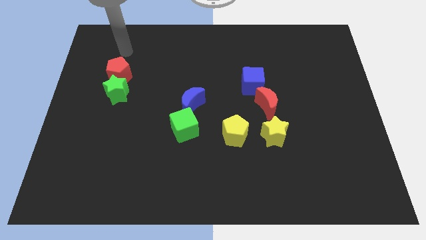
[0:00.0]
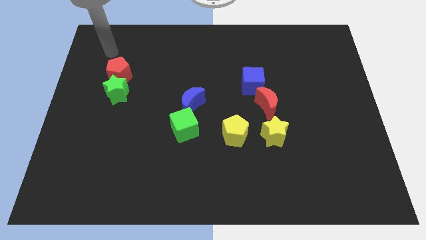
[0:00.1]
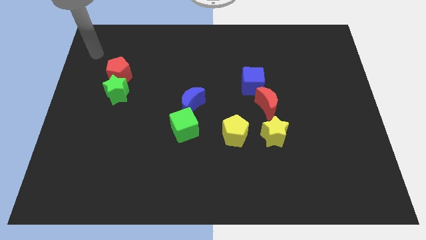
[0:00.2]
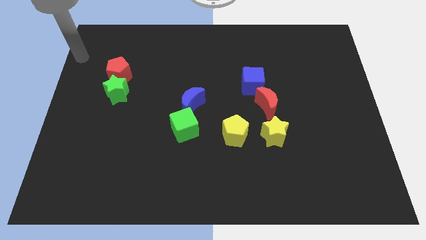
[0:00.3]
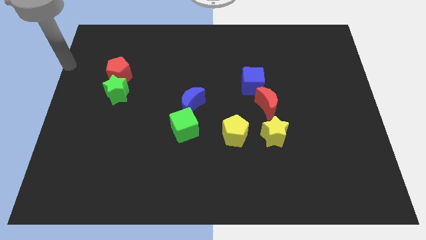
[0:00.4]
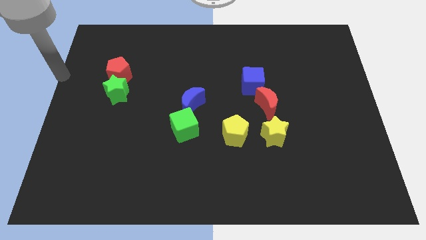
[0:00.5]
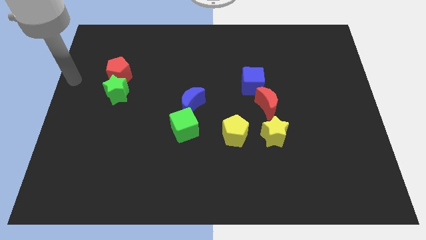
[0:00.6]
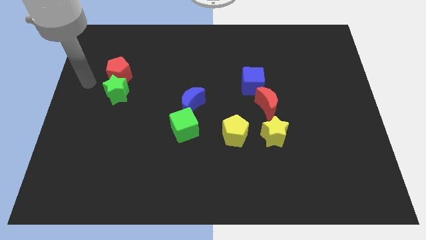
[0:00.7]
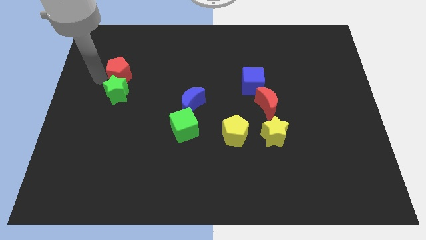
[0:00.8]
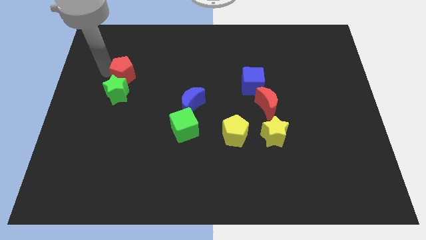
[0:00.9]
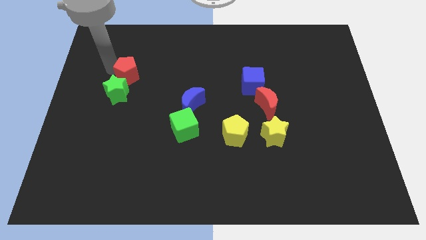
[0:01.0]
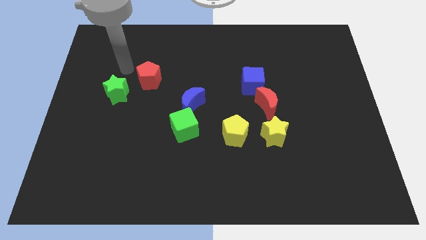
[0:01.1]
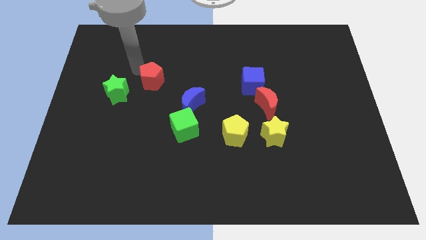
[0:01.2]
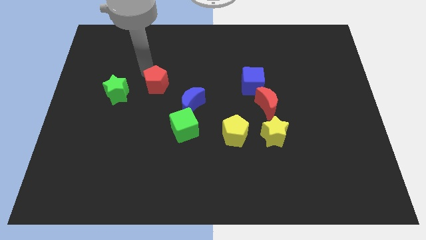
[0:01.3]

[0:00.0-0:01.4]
separate the green star and the red pentagon

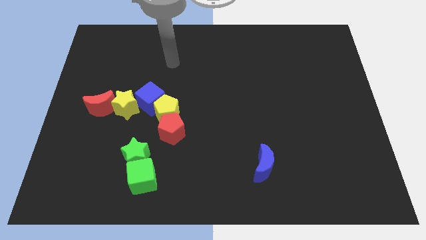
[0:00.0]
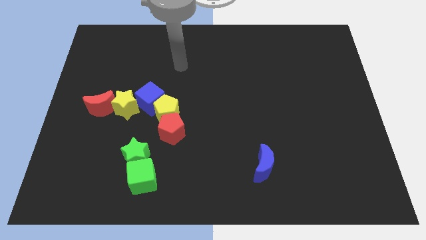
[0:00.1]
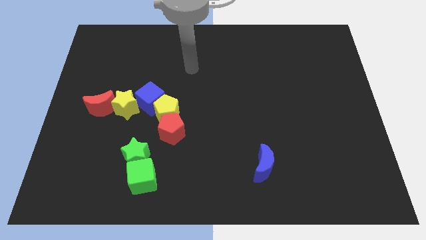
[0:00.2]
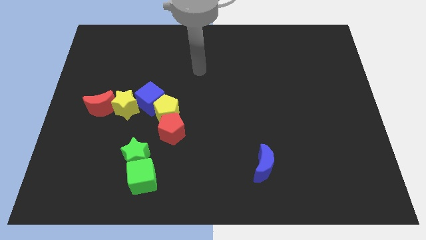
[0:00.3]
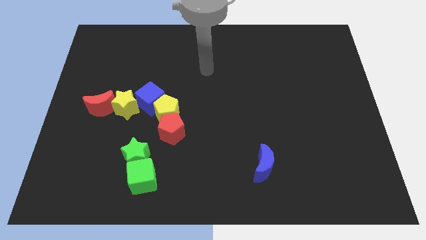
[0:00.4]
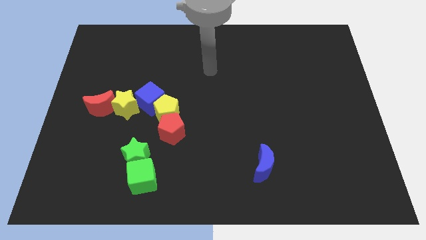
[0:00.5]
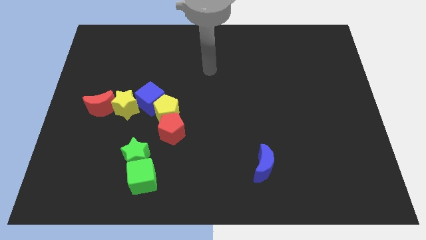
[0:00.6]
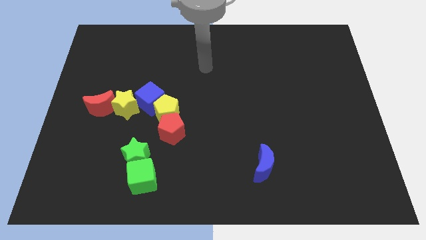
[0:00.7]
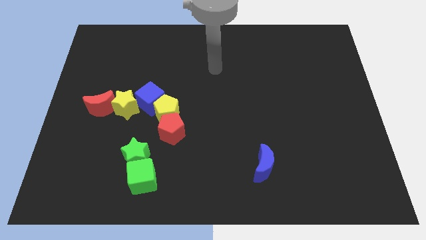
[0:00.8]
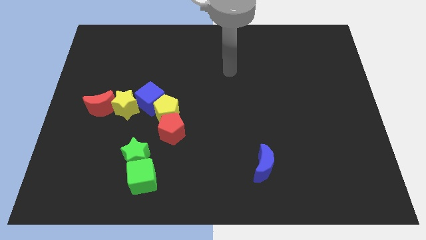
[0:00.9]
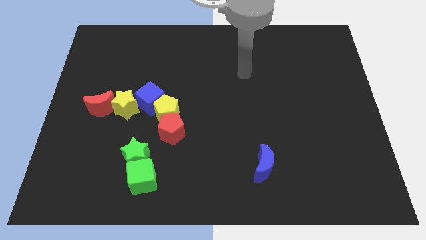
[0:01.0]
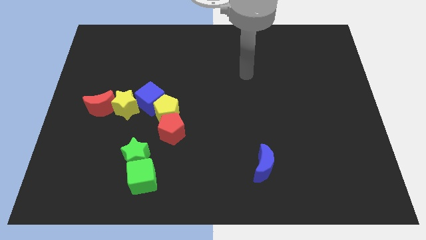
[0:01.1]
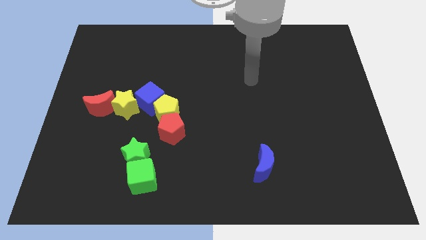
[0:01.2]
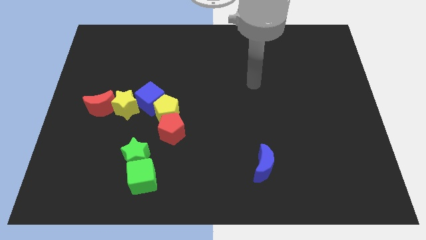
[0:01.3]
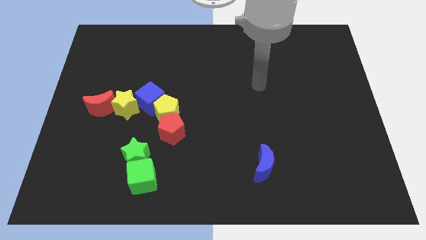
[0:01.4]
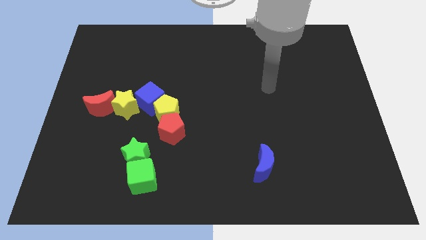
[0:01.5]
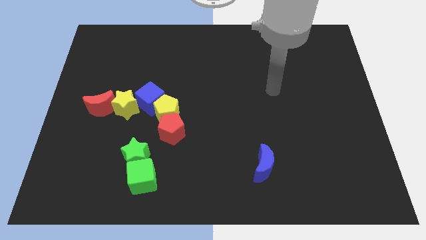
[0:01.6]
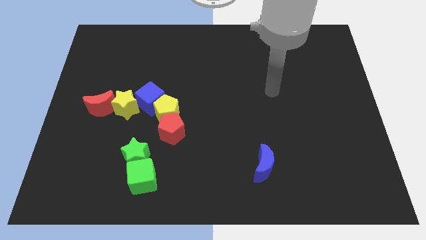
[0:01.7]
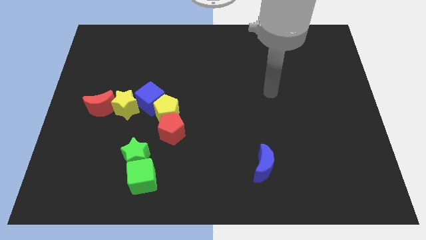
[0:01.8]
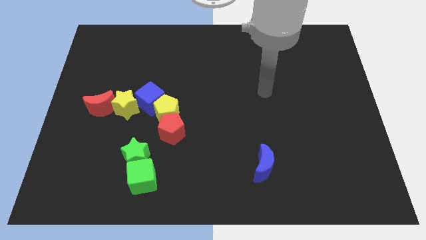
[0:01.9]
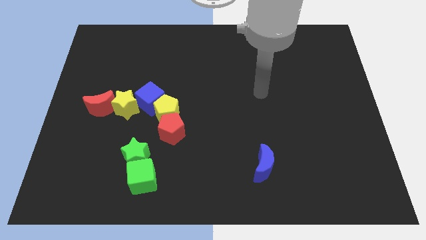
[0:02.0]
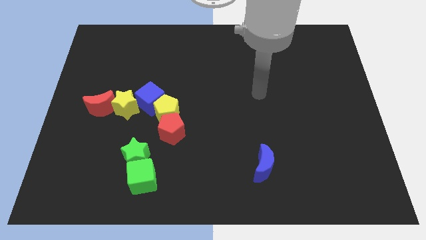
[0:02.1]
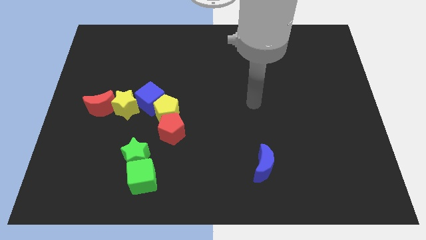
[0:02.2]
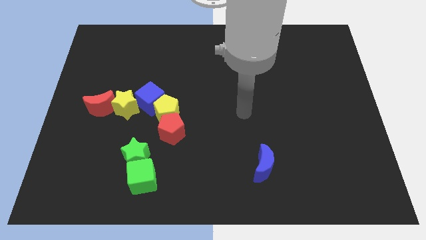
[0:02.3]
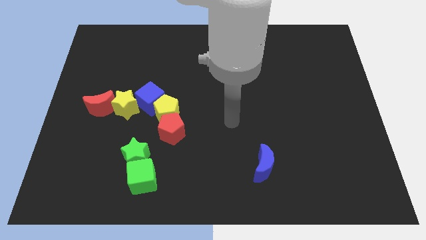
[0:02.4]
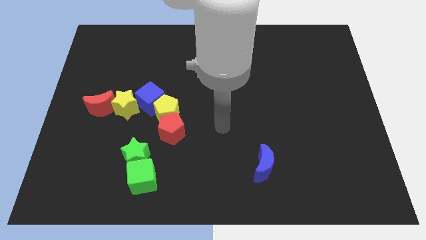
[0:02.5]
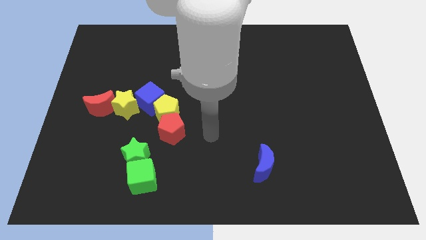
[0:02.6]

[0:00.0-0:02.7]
move the arm to the right of the red pentagon

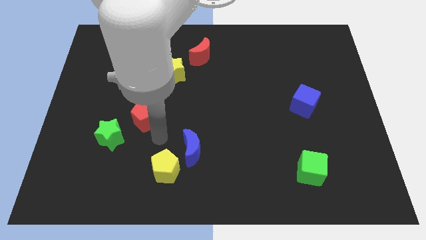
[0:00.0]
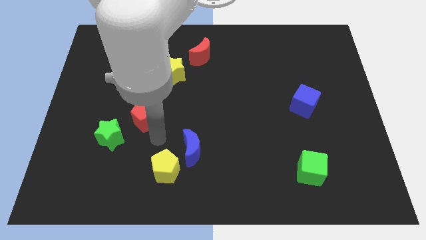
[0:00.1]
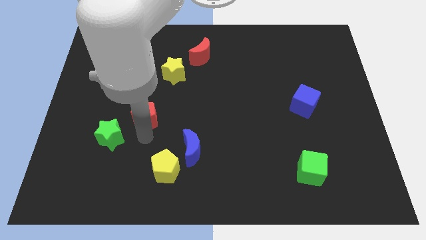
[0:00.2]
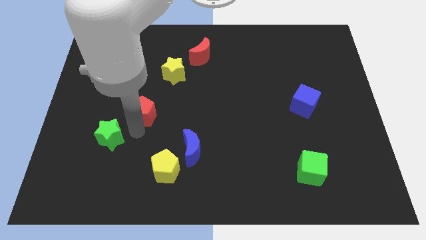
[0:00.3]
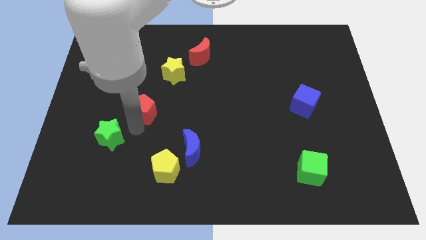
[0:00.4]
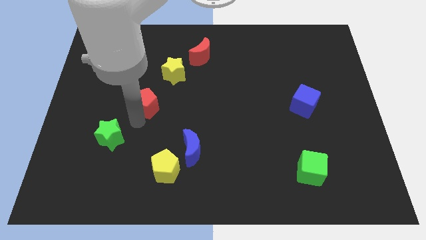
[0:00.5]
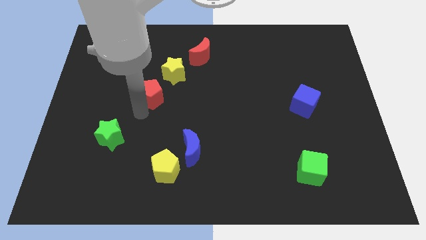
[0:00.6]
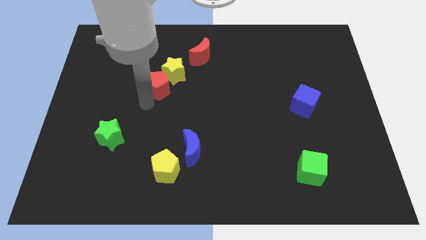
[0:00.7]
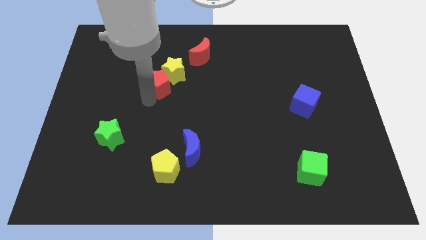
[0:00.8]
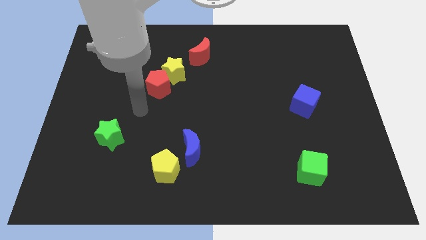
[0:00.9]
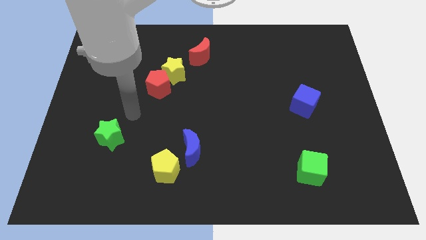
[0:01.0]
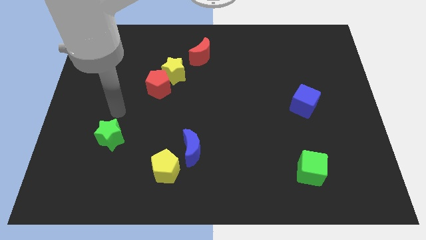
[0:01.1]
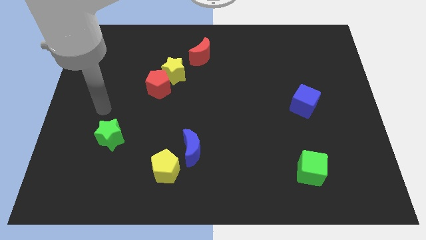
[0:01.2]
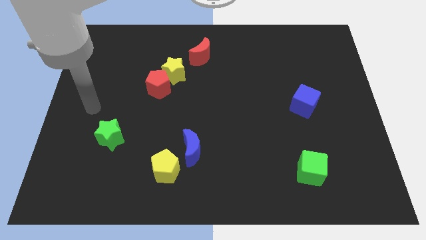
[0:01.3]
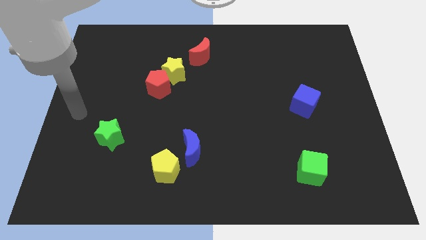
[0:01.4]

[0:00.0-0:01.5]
place the red pentagon diagonal to the yellow star

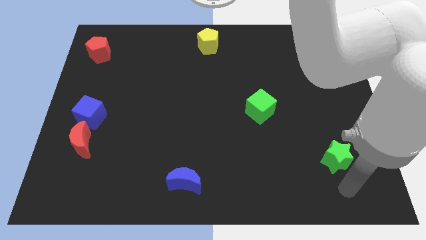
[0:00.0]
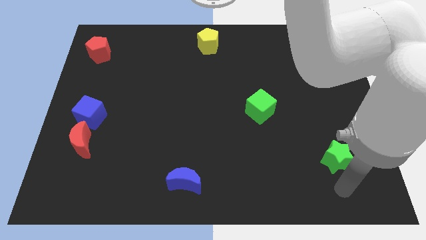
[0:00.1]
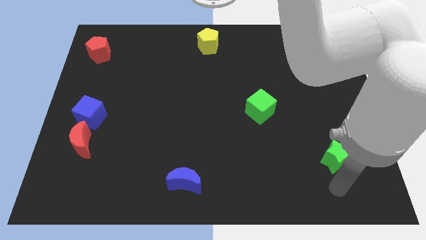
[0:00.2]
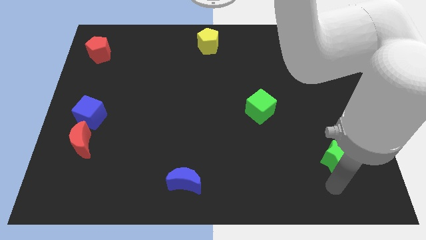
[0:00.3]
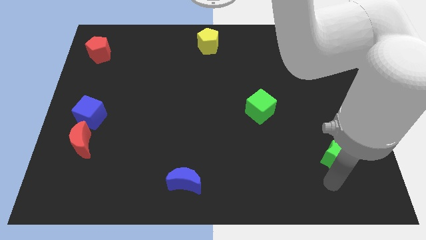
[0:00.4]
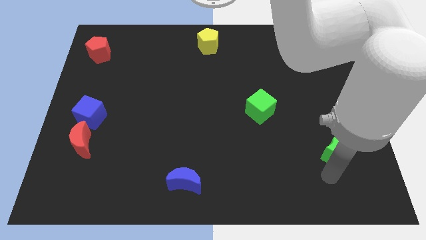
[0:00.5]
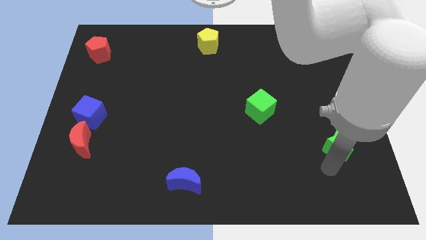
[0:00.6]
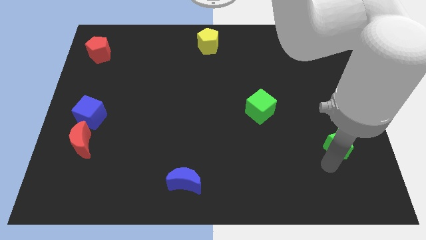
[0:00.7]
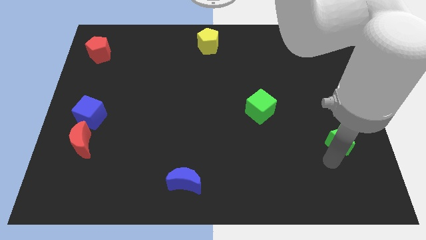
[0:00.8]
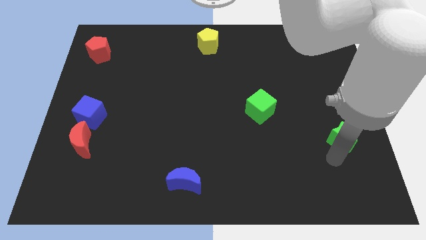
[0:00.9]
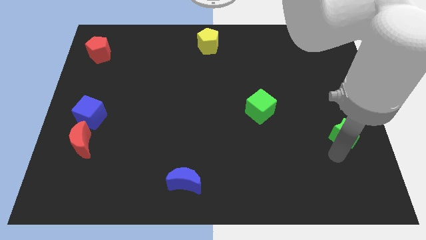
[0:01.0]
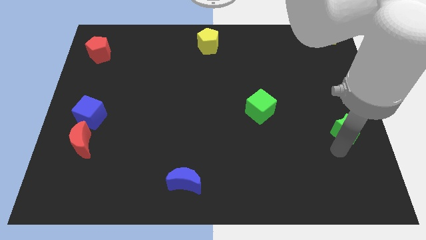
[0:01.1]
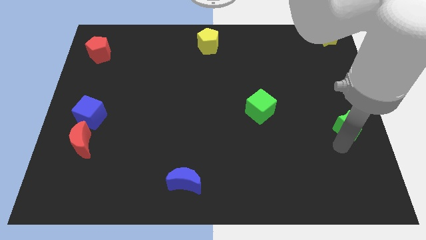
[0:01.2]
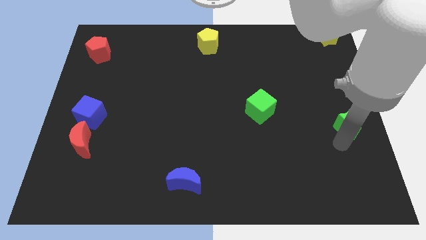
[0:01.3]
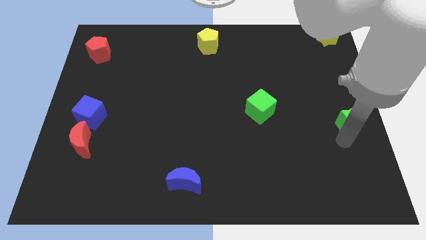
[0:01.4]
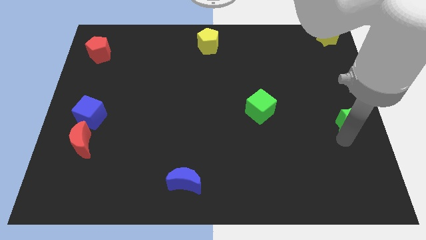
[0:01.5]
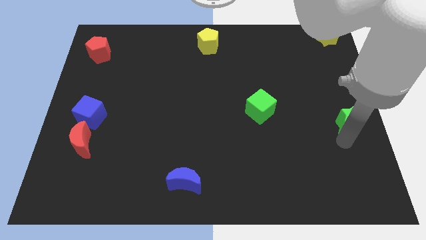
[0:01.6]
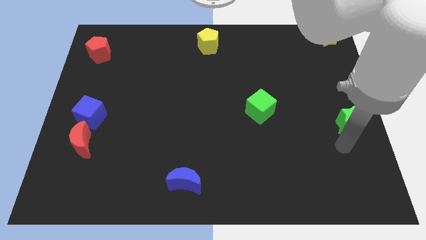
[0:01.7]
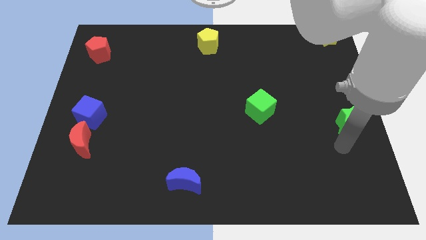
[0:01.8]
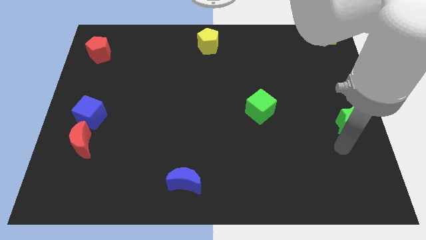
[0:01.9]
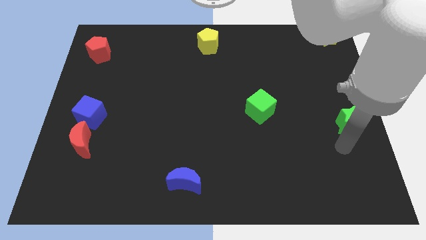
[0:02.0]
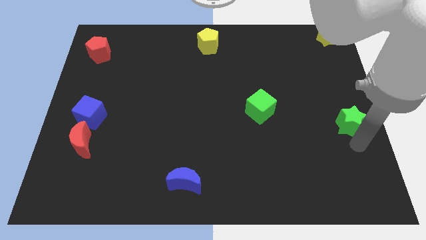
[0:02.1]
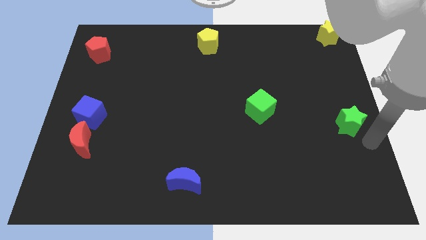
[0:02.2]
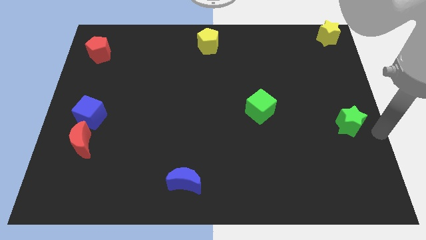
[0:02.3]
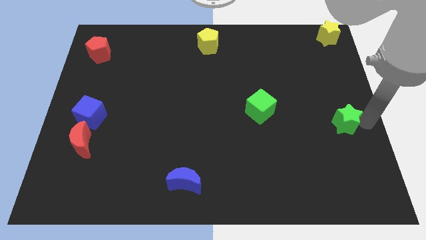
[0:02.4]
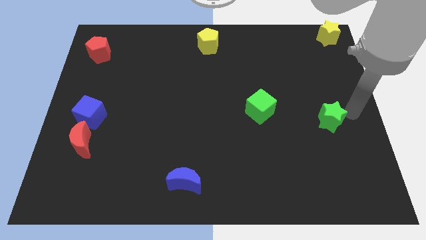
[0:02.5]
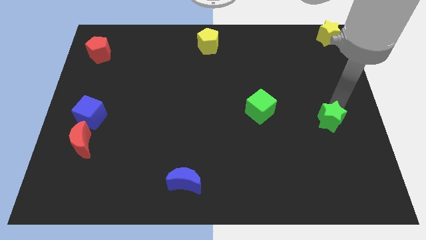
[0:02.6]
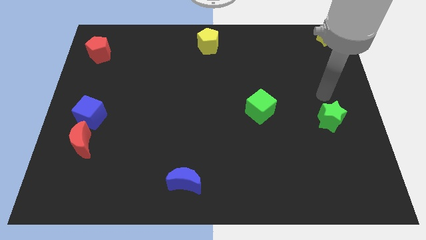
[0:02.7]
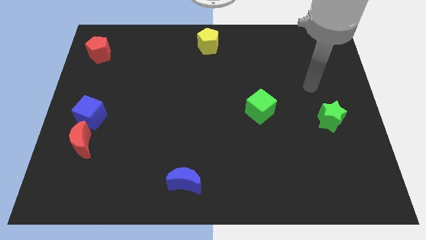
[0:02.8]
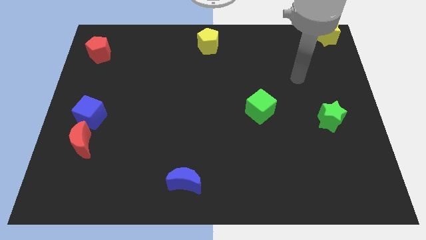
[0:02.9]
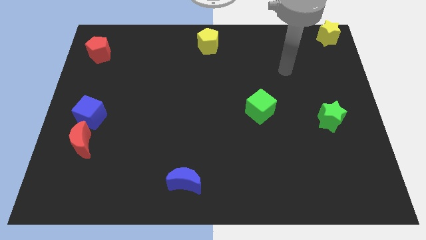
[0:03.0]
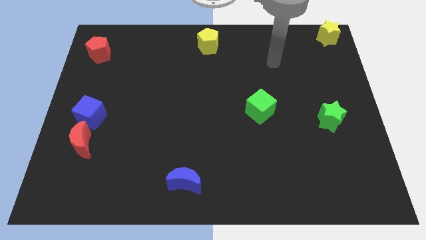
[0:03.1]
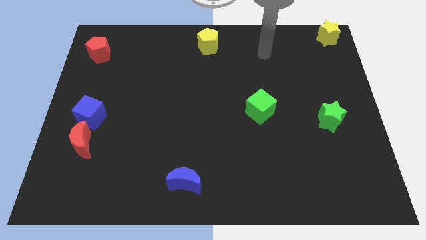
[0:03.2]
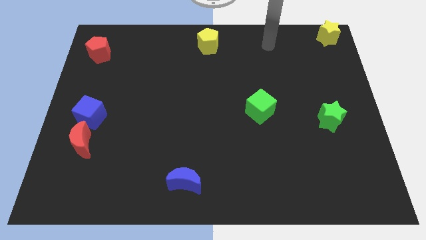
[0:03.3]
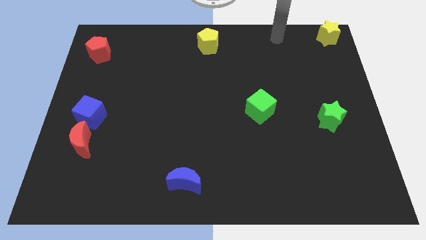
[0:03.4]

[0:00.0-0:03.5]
drag the green star slightly upwards
